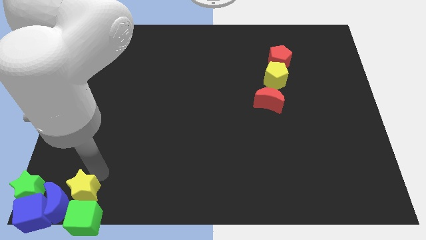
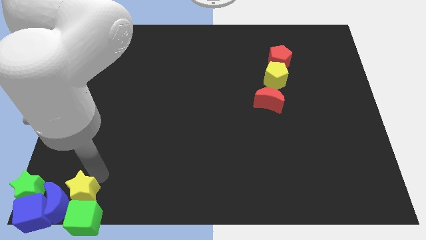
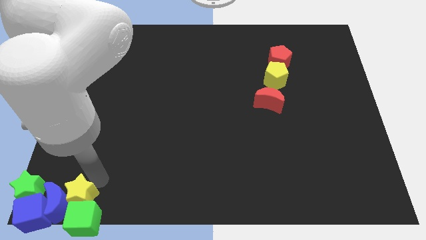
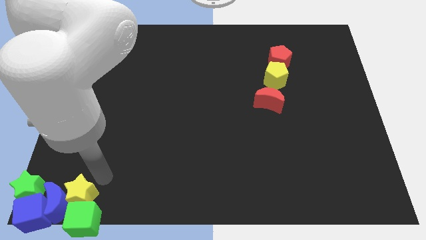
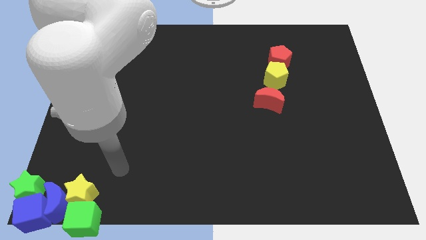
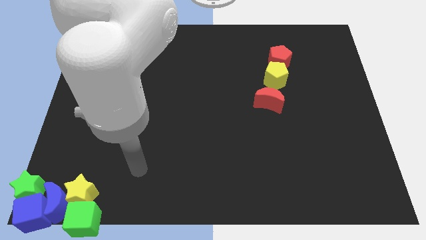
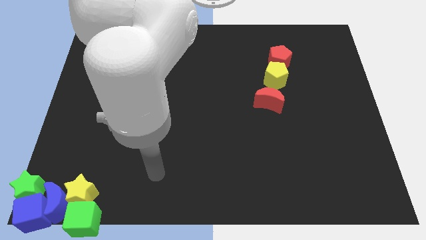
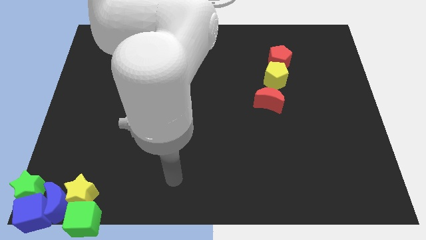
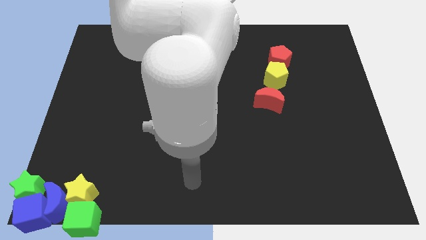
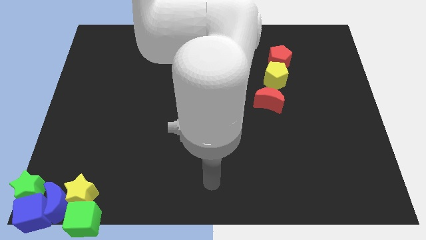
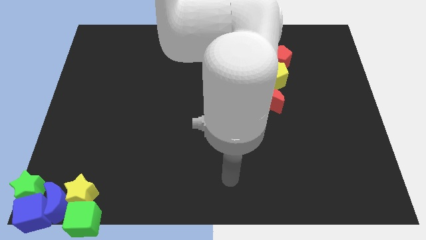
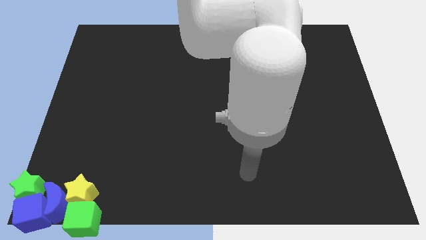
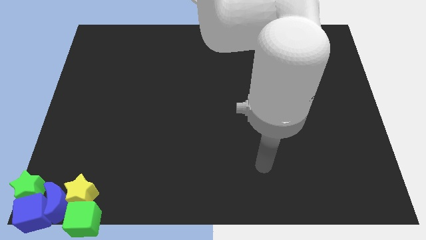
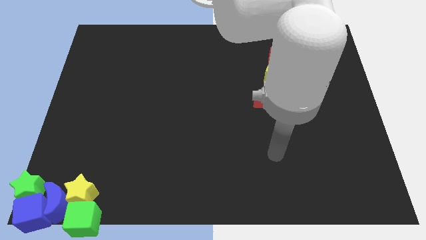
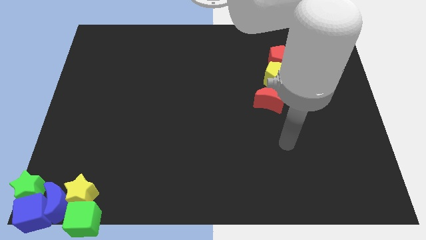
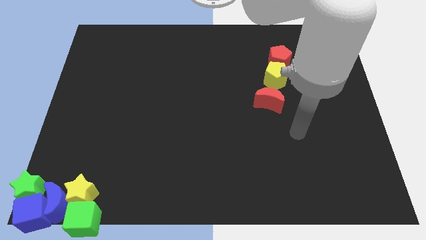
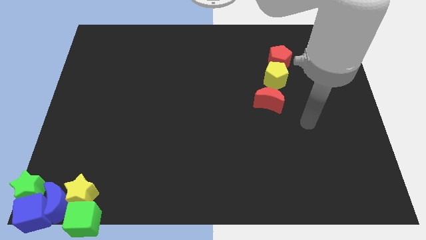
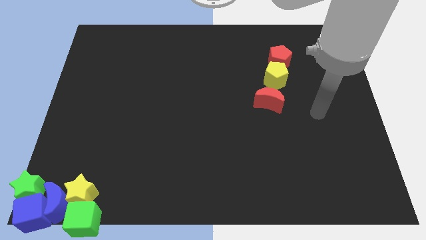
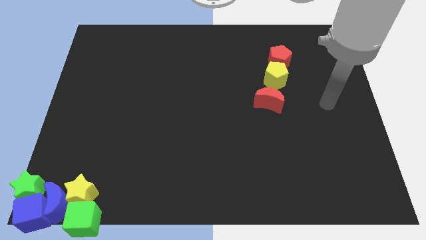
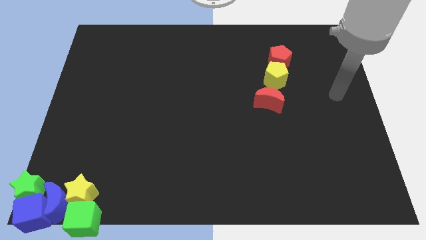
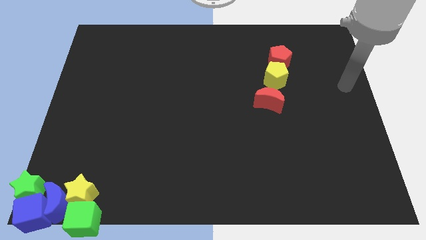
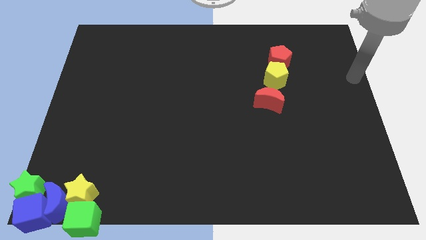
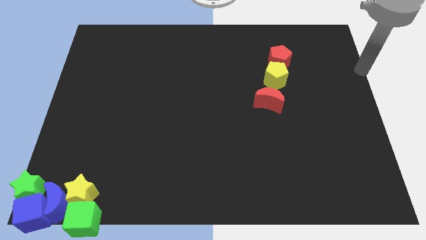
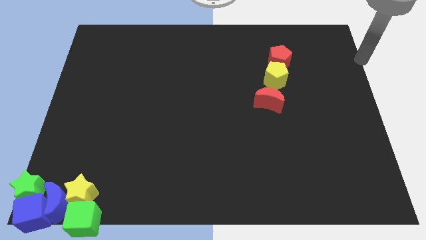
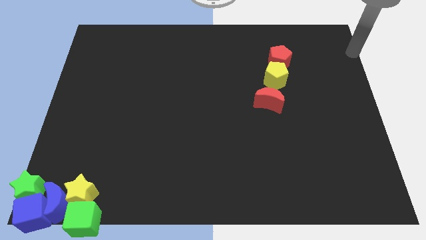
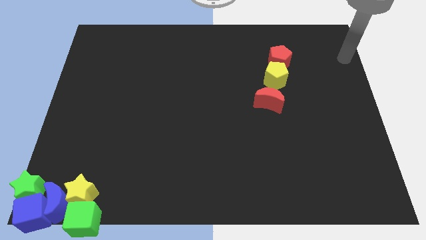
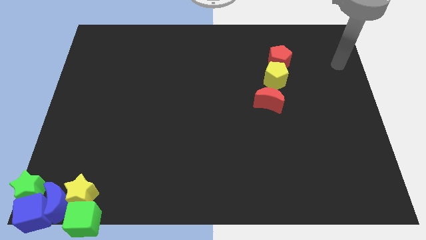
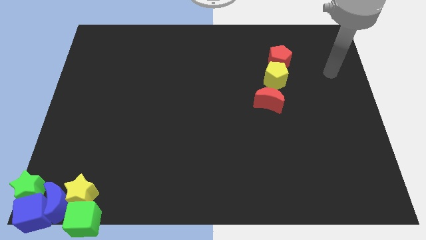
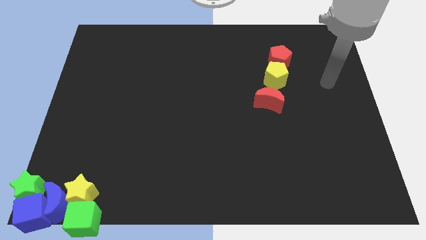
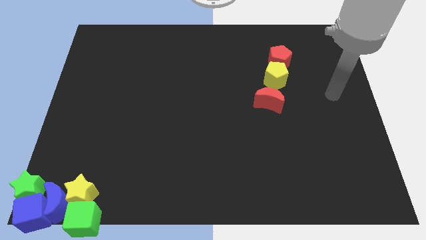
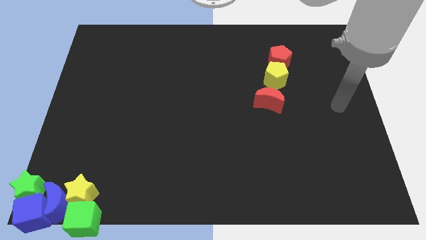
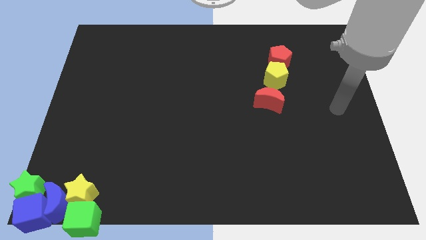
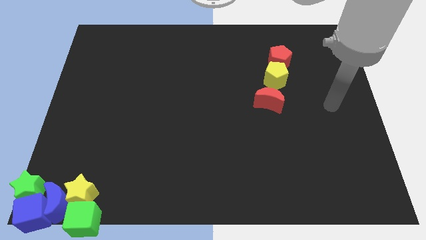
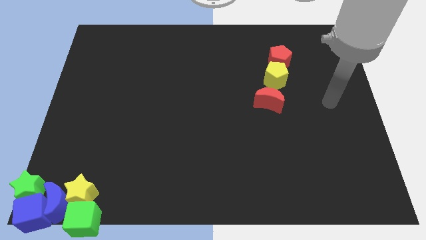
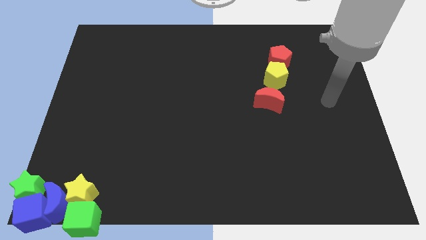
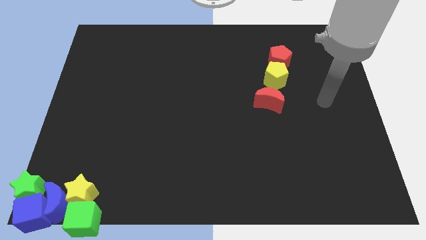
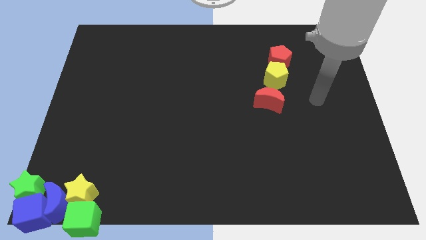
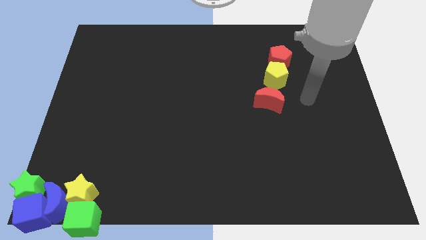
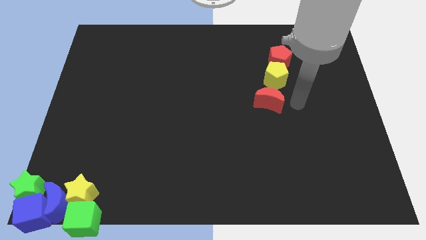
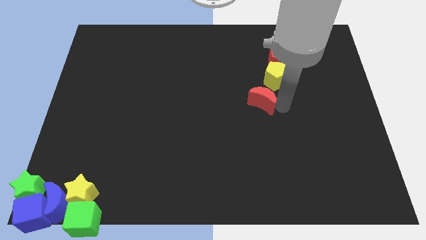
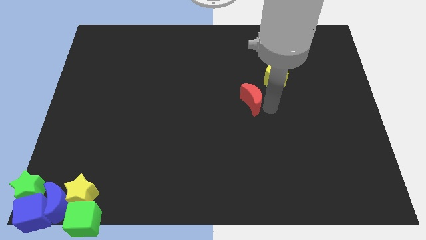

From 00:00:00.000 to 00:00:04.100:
tap the right side of the red crescent

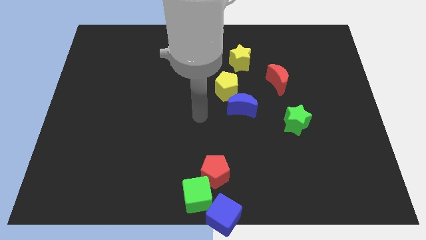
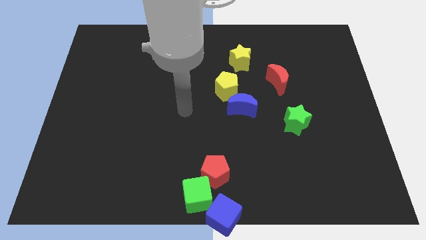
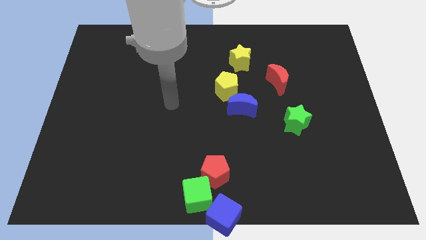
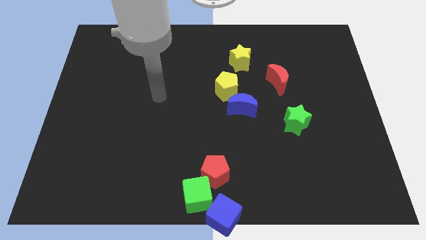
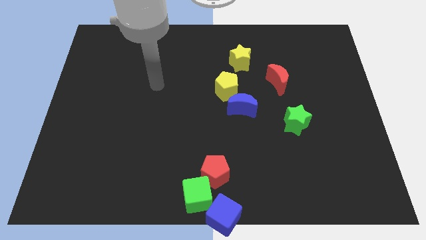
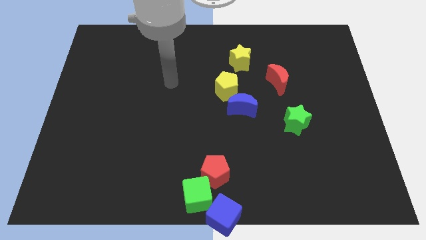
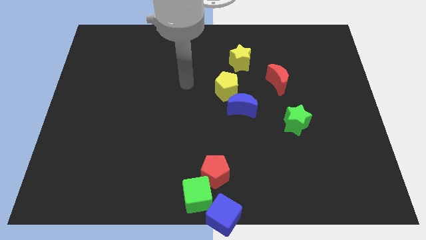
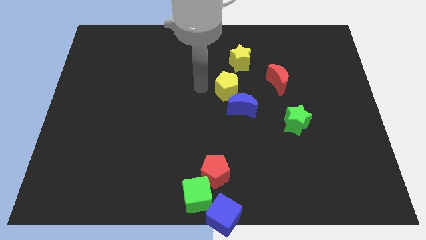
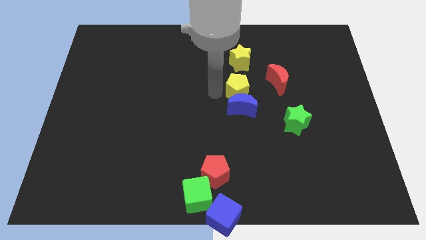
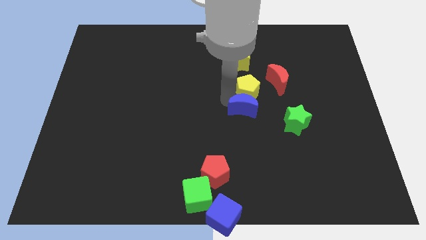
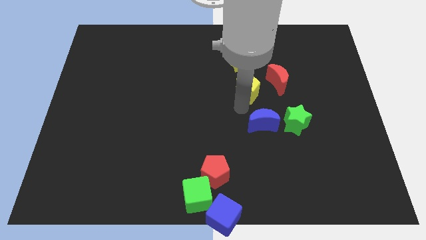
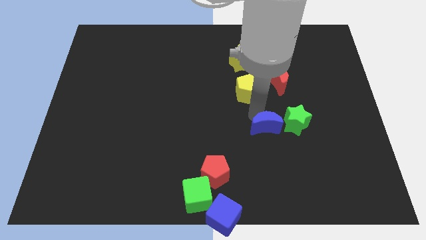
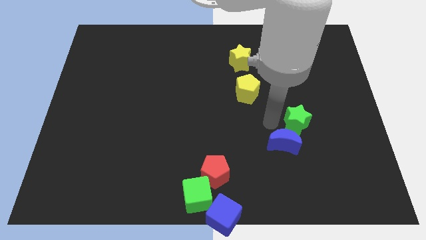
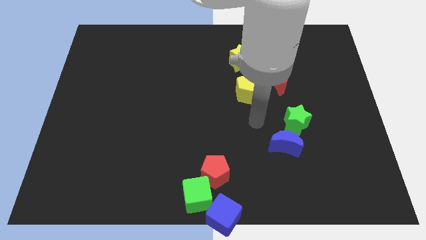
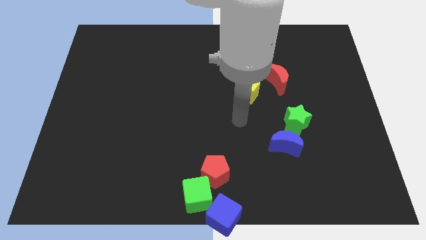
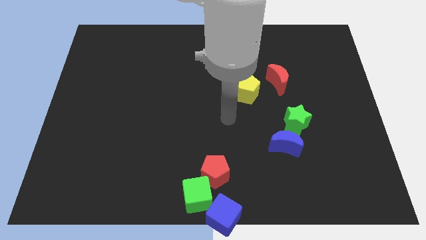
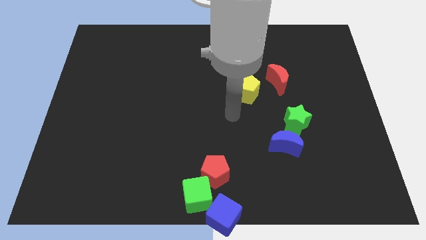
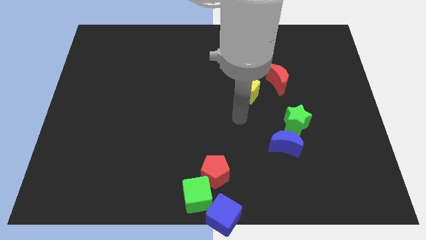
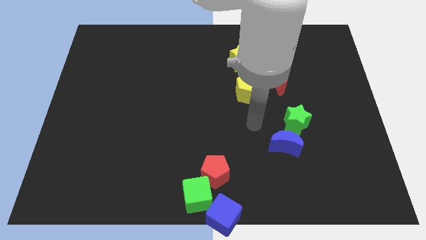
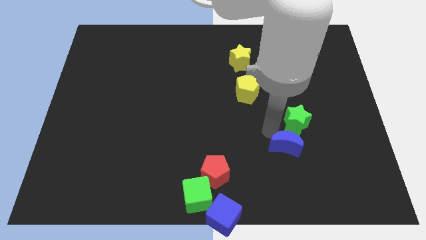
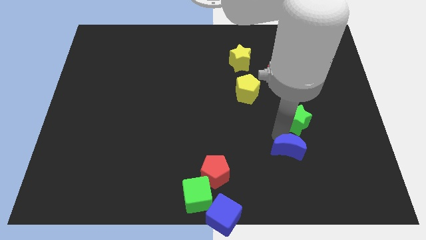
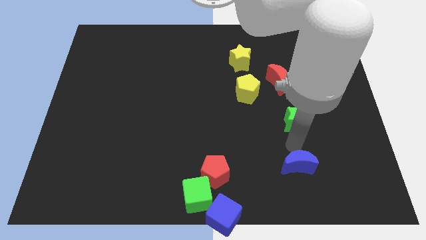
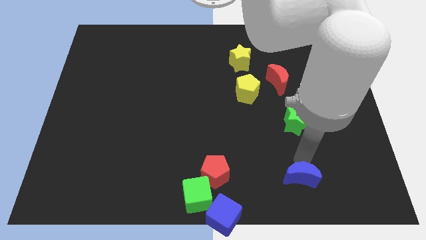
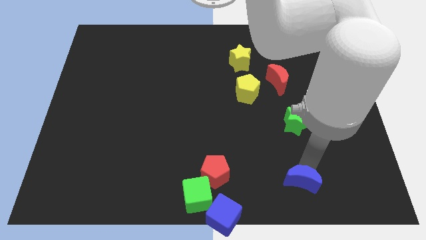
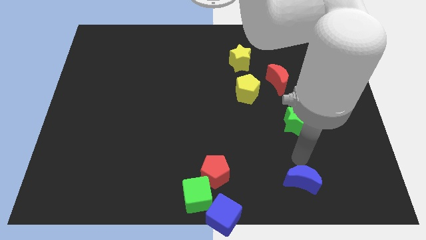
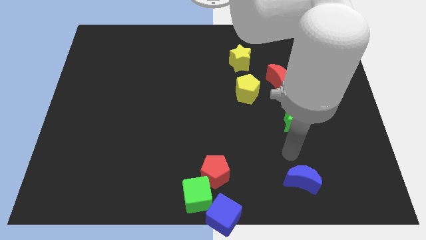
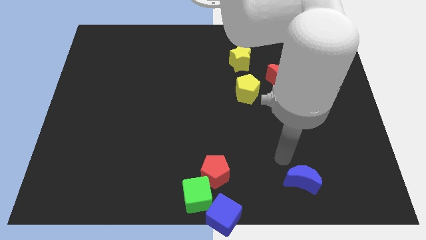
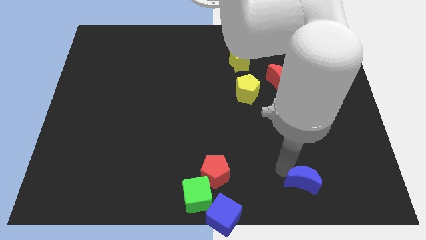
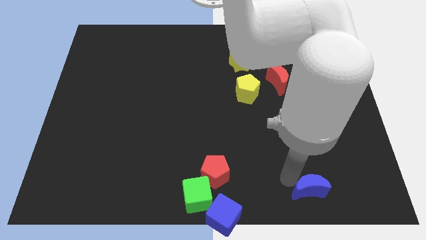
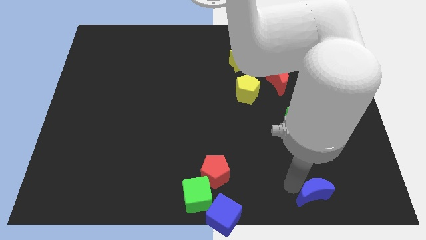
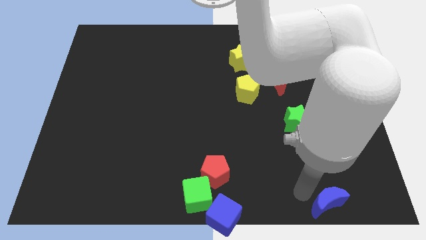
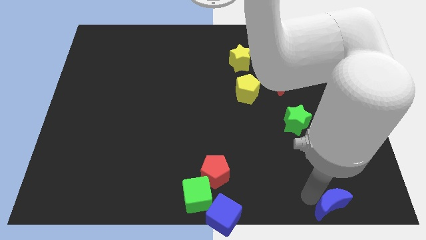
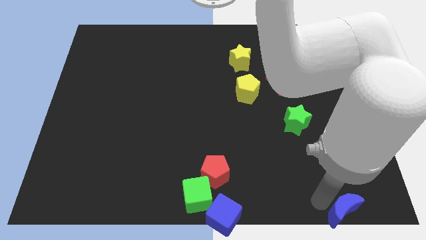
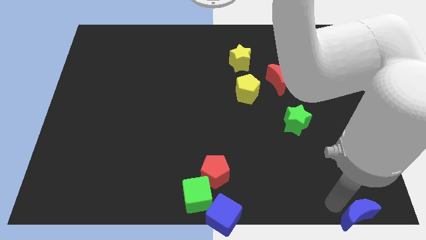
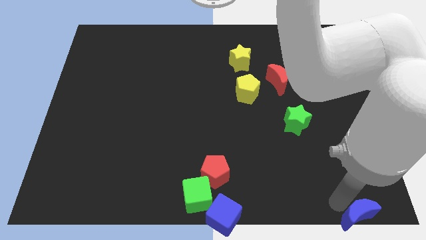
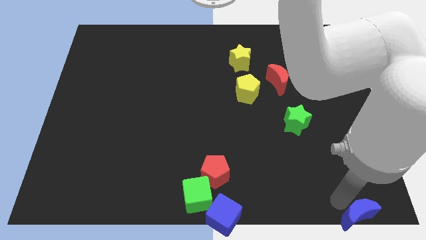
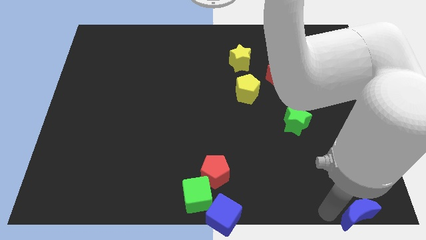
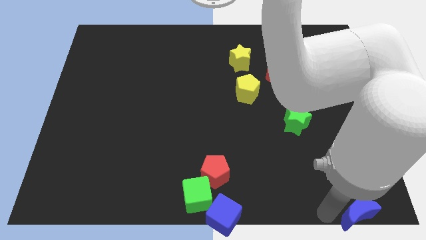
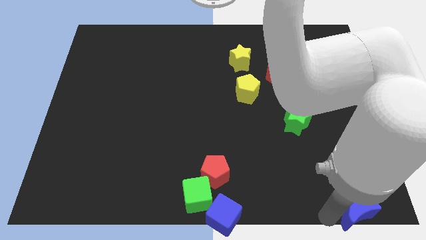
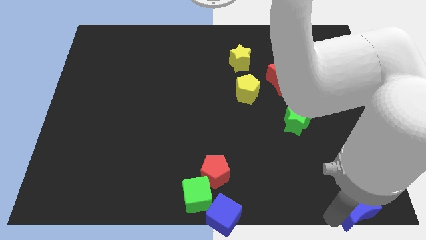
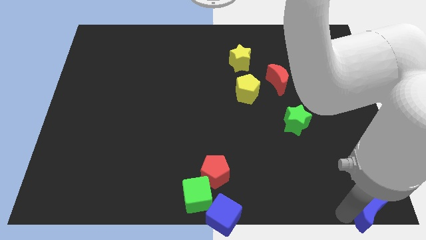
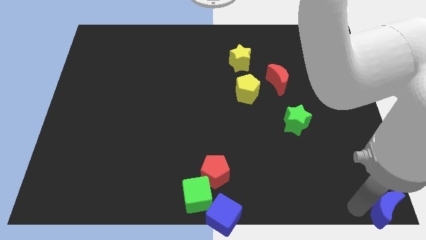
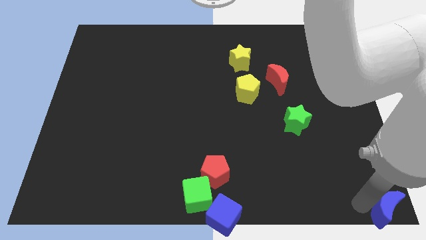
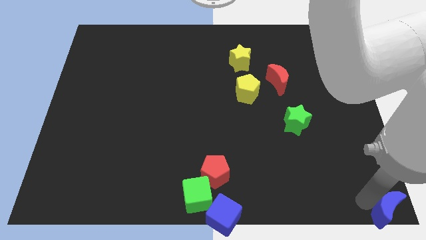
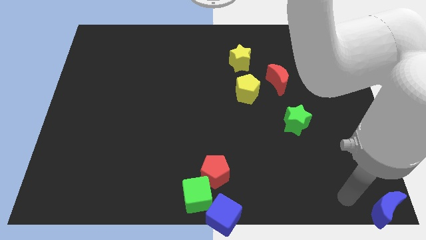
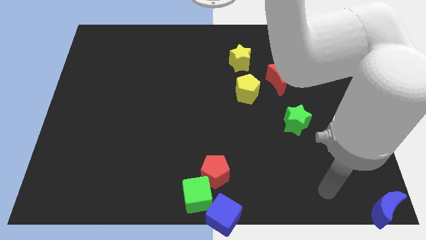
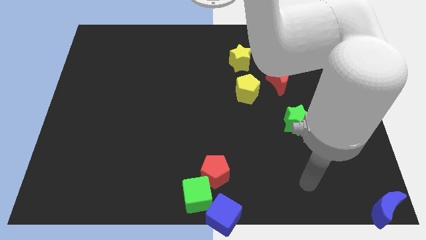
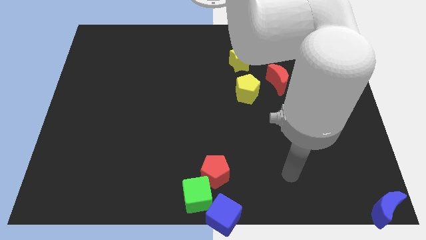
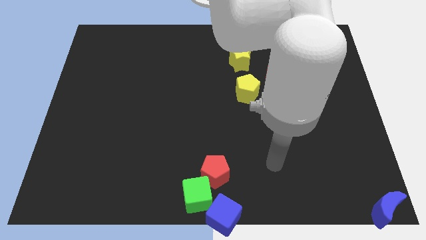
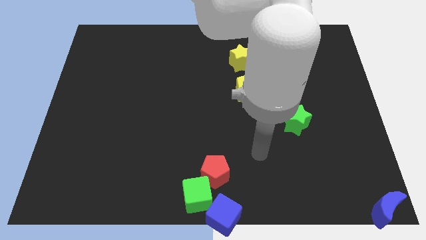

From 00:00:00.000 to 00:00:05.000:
place the blue crescent to the bottom right corner of the board
